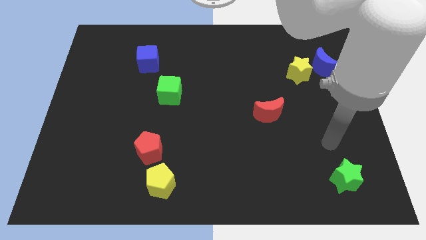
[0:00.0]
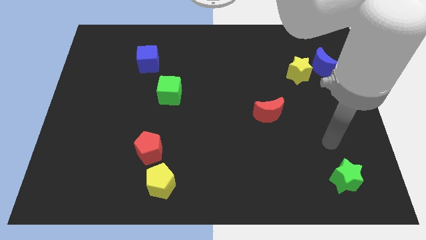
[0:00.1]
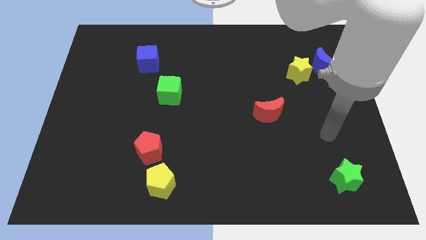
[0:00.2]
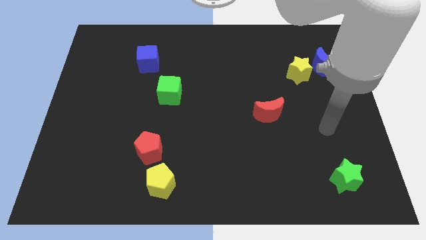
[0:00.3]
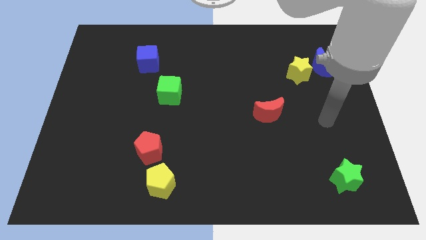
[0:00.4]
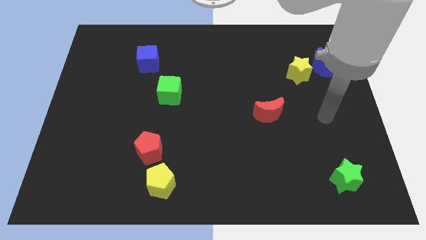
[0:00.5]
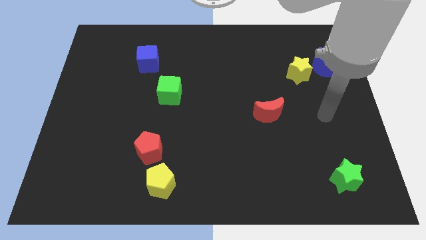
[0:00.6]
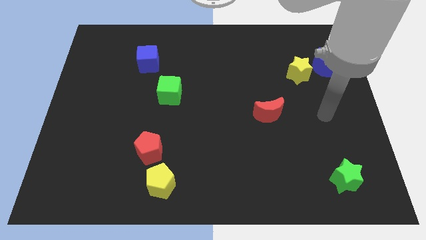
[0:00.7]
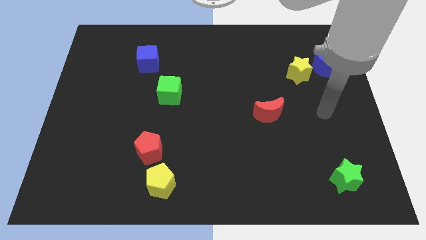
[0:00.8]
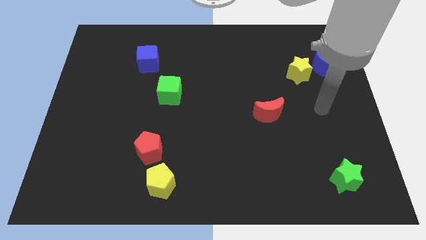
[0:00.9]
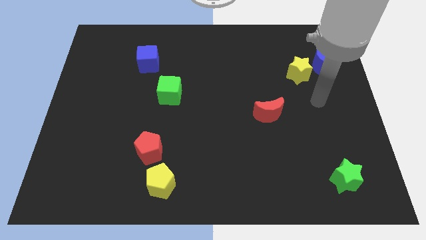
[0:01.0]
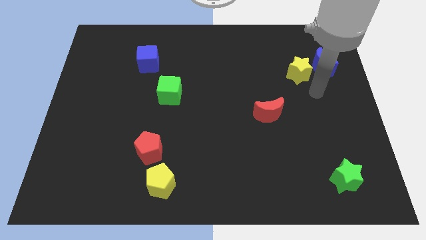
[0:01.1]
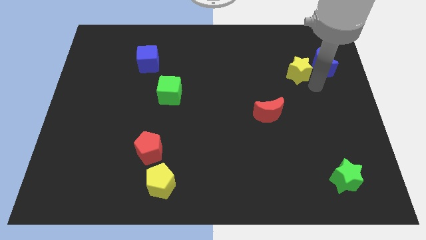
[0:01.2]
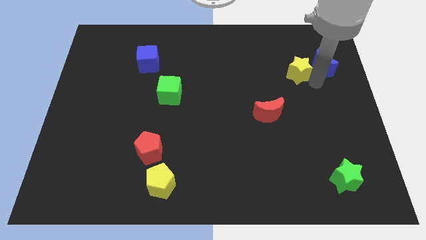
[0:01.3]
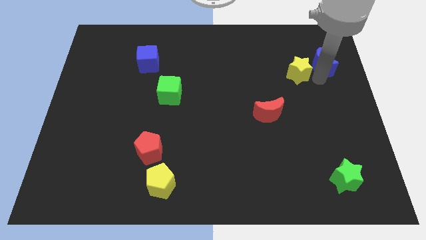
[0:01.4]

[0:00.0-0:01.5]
place the arm below the blue moon

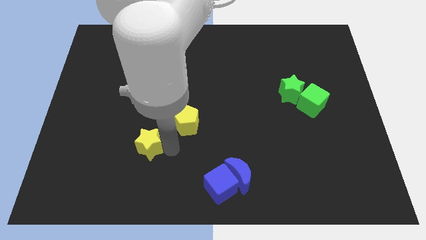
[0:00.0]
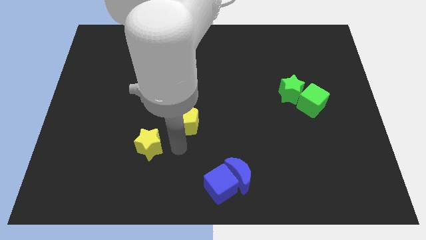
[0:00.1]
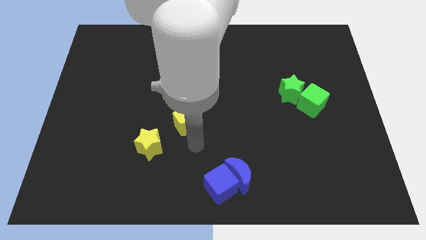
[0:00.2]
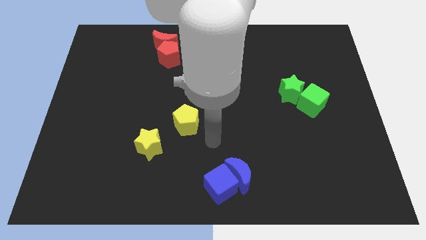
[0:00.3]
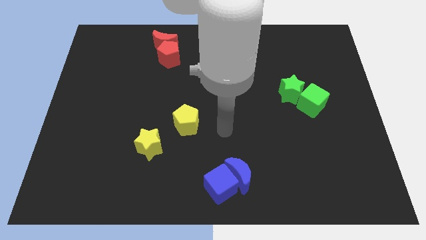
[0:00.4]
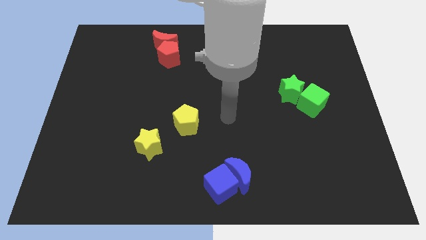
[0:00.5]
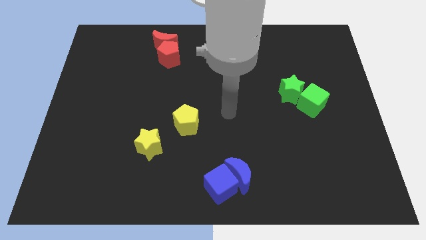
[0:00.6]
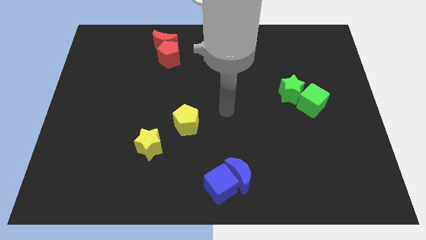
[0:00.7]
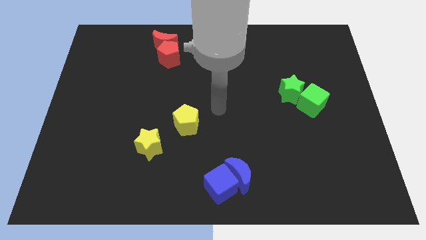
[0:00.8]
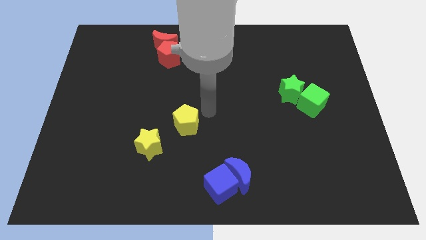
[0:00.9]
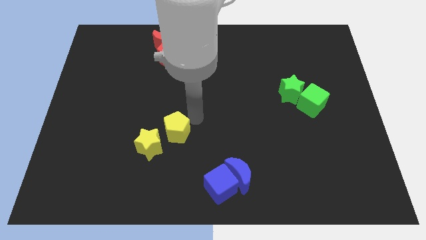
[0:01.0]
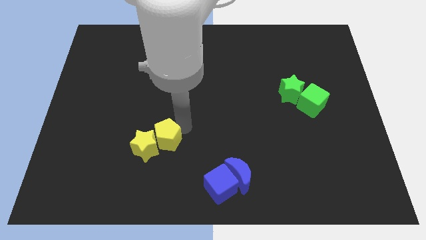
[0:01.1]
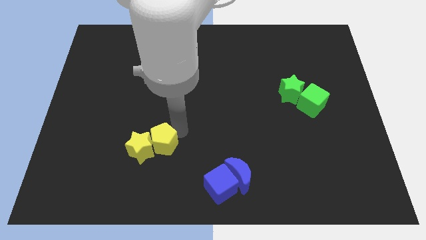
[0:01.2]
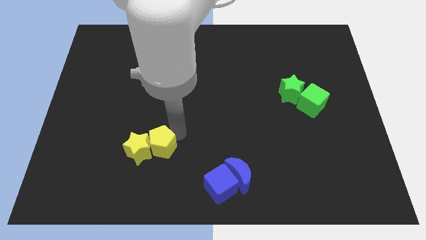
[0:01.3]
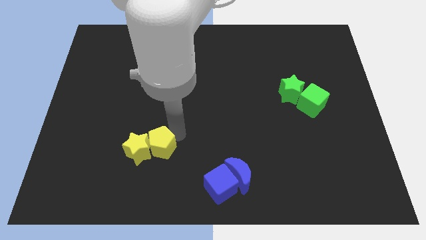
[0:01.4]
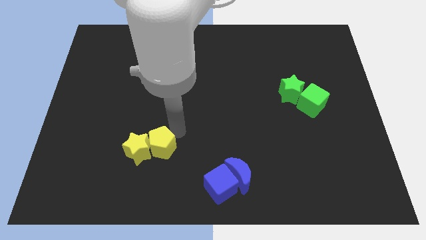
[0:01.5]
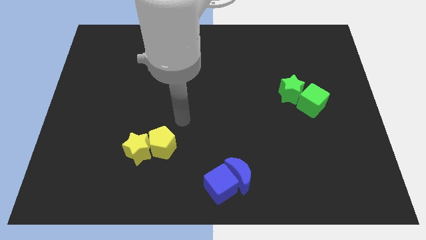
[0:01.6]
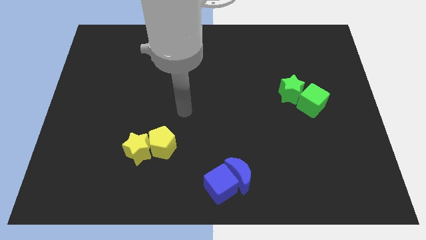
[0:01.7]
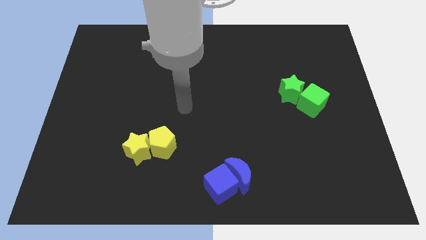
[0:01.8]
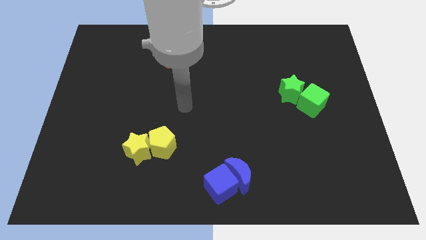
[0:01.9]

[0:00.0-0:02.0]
put the yellow blocks together

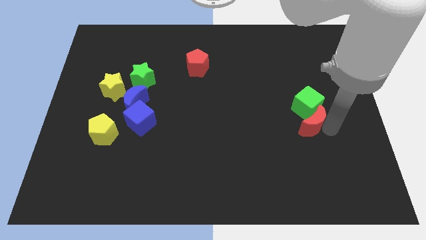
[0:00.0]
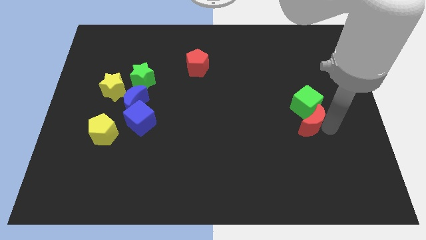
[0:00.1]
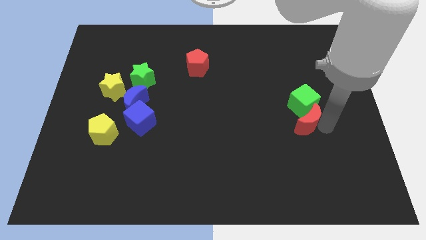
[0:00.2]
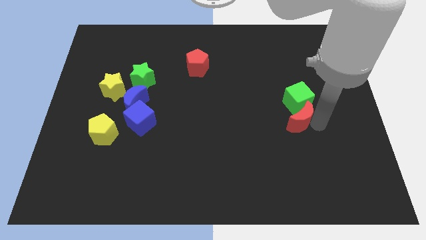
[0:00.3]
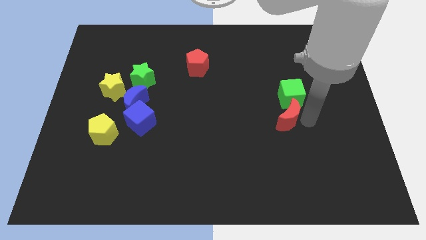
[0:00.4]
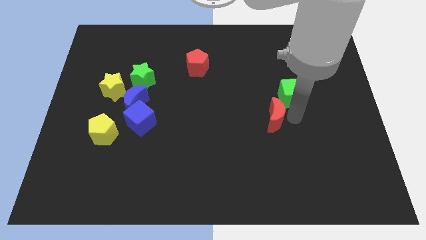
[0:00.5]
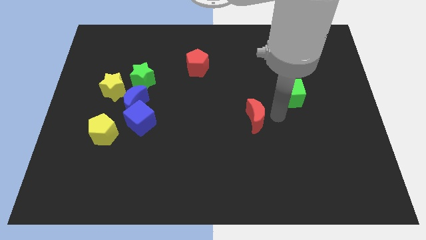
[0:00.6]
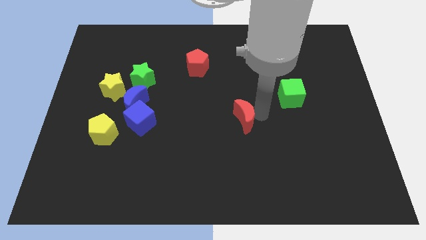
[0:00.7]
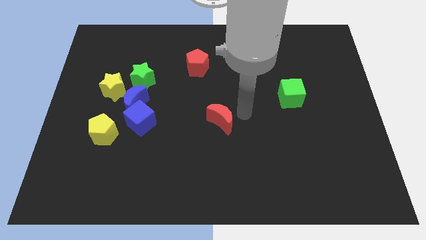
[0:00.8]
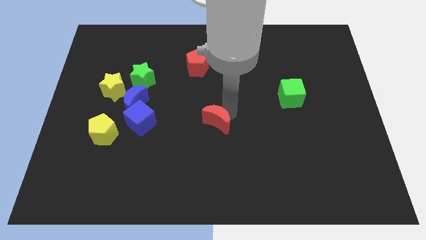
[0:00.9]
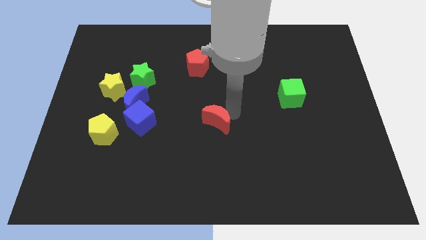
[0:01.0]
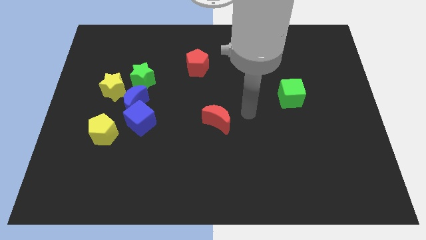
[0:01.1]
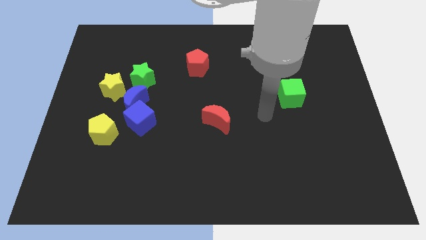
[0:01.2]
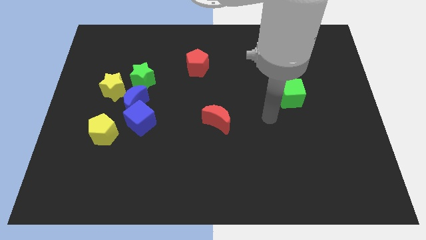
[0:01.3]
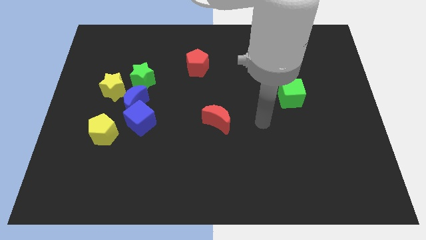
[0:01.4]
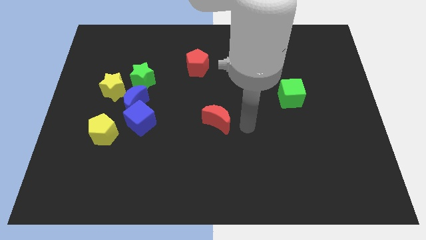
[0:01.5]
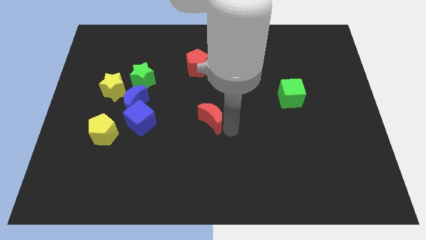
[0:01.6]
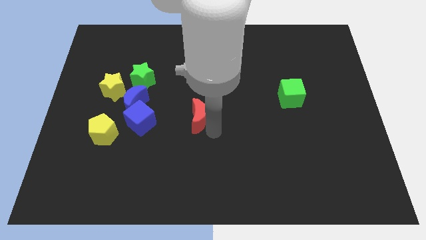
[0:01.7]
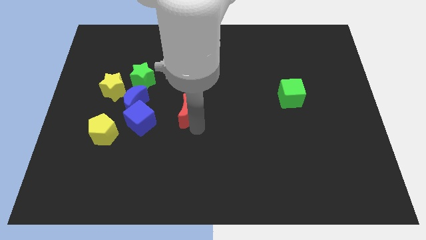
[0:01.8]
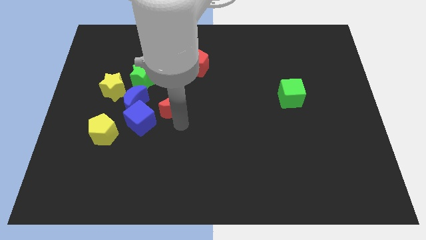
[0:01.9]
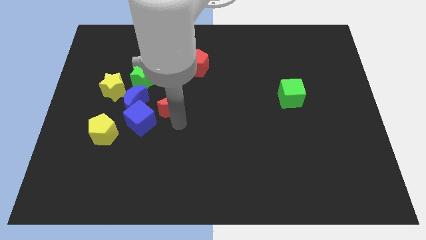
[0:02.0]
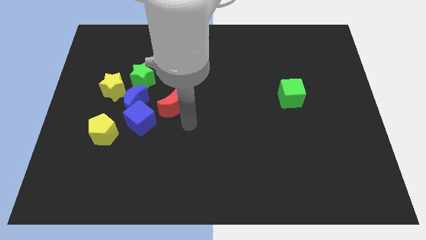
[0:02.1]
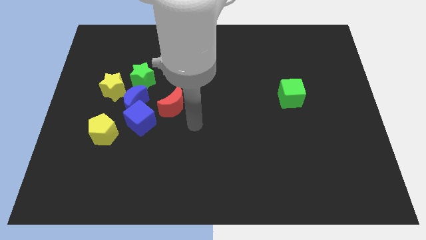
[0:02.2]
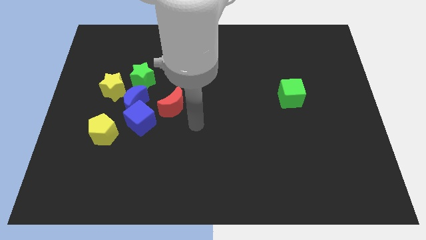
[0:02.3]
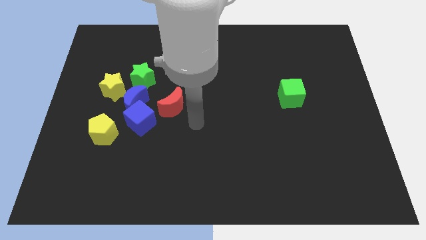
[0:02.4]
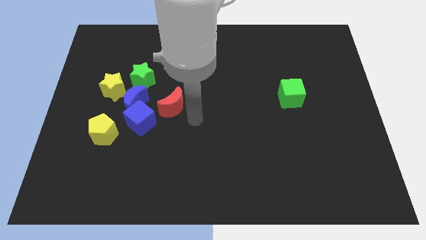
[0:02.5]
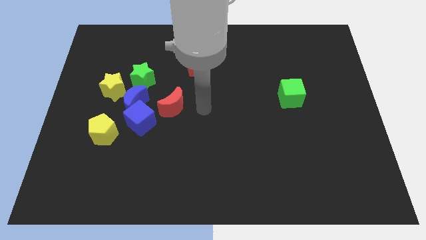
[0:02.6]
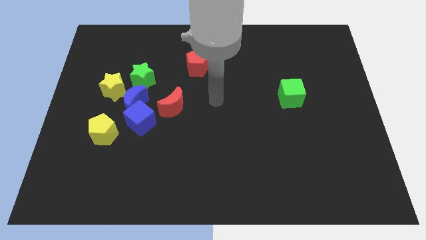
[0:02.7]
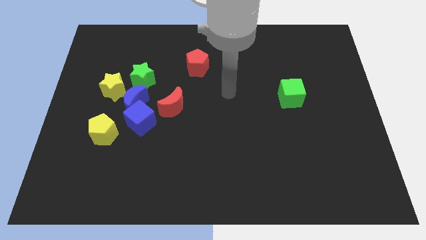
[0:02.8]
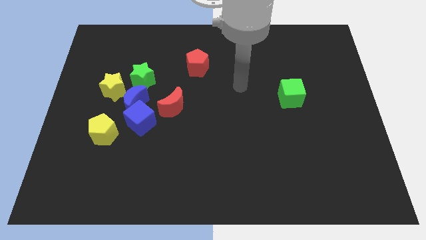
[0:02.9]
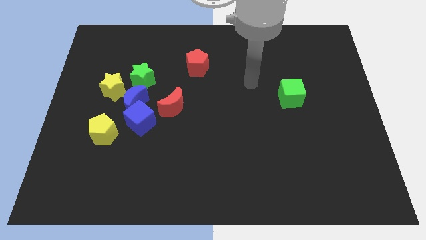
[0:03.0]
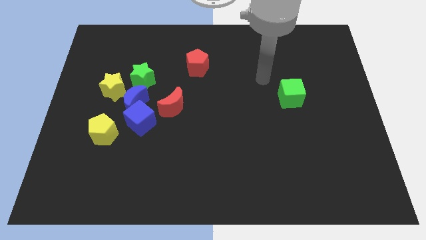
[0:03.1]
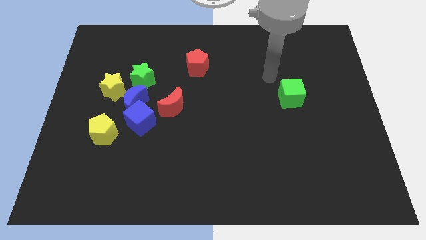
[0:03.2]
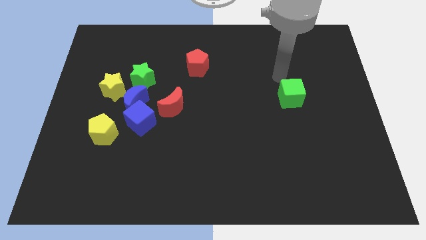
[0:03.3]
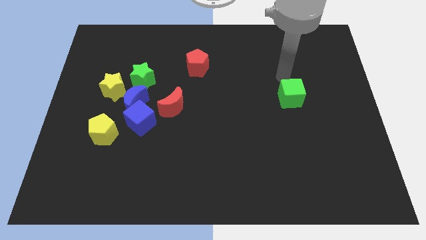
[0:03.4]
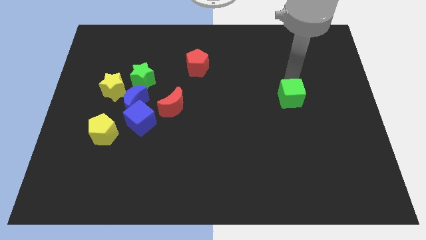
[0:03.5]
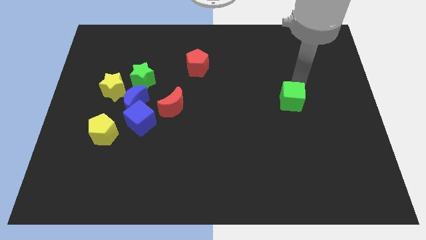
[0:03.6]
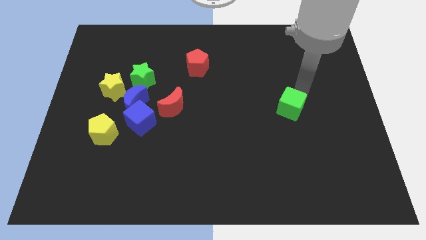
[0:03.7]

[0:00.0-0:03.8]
move the red moon towards the top right of the blue cube

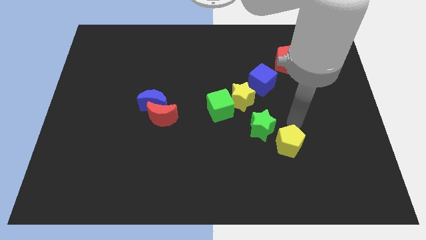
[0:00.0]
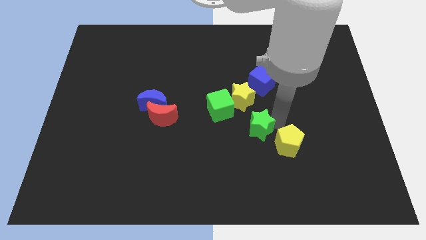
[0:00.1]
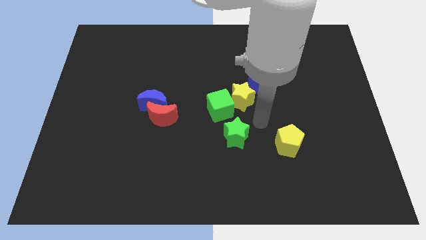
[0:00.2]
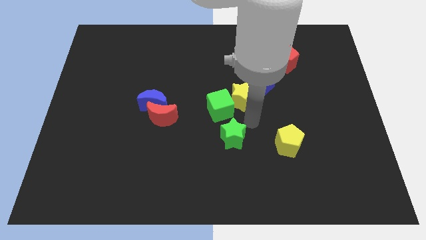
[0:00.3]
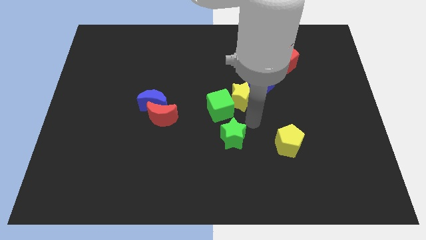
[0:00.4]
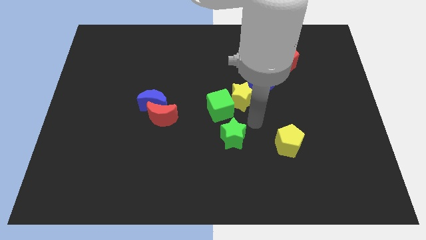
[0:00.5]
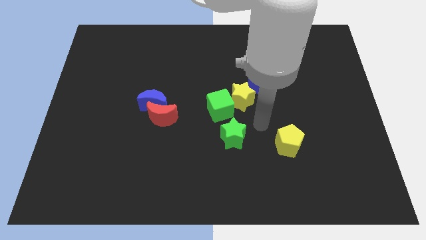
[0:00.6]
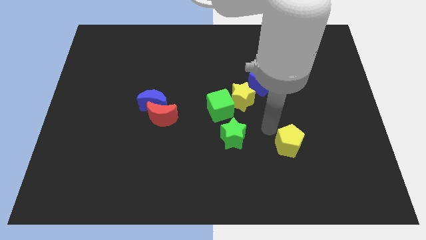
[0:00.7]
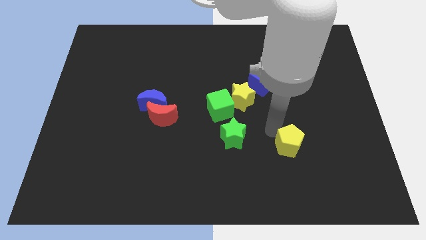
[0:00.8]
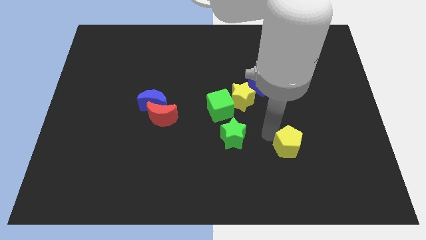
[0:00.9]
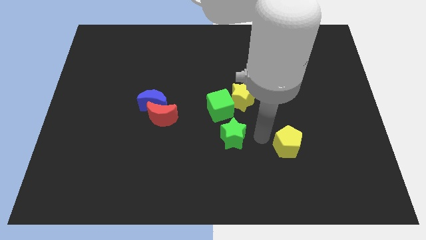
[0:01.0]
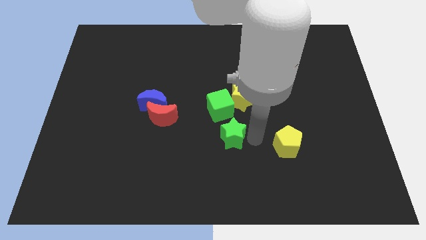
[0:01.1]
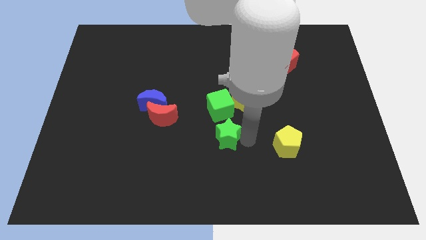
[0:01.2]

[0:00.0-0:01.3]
put the green star below the green cube

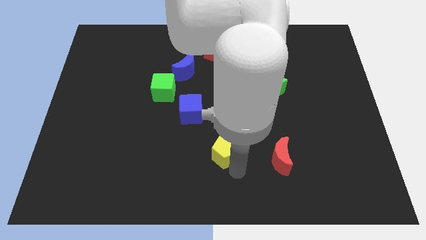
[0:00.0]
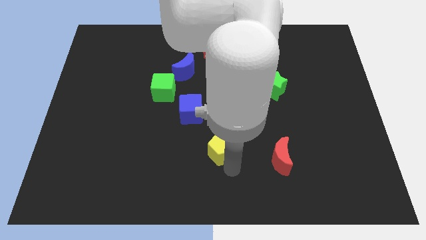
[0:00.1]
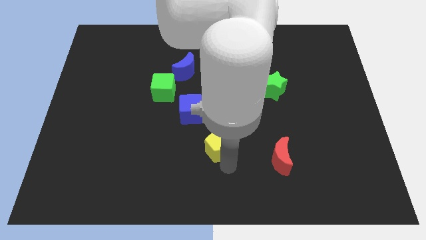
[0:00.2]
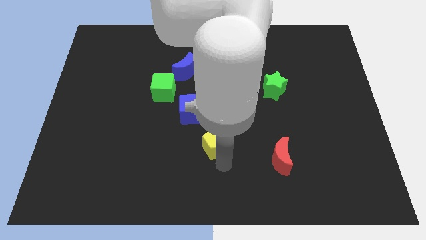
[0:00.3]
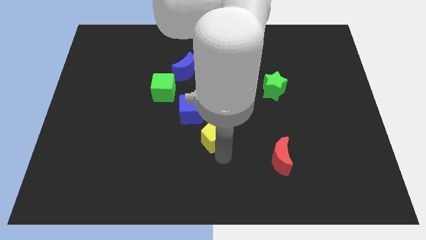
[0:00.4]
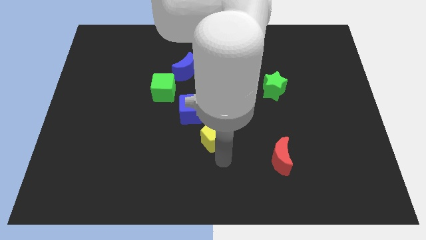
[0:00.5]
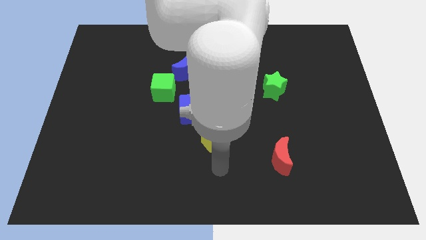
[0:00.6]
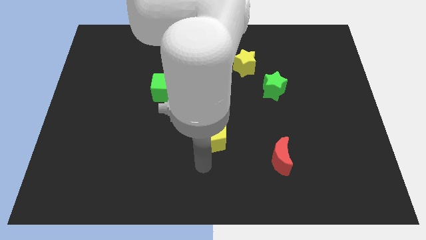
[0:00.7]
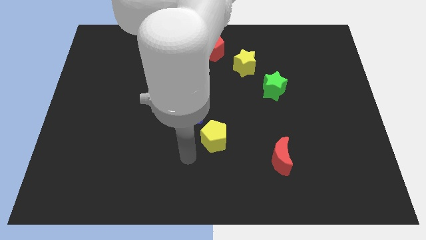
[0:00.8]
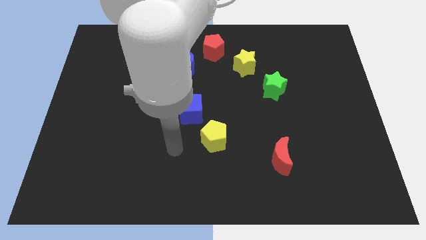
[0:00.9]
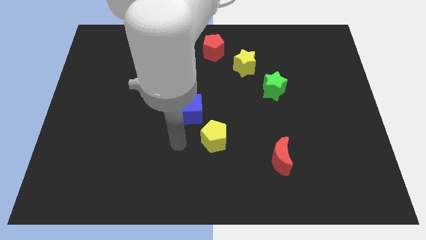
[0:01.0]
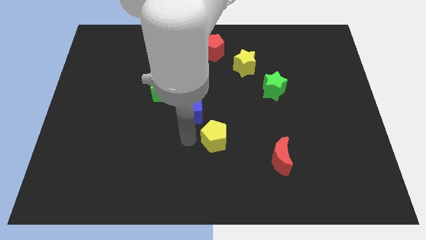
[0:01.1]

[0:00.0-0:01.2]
push the yellow pentagon towards the blue cube
